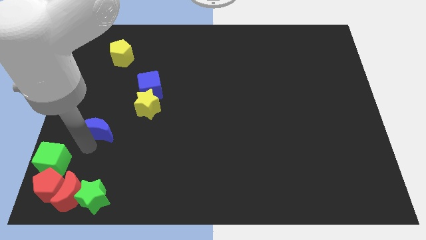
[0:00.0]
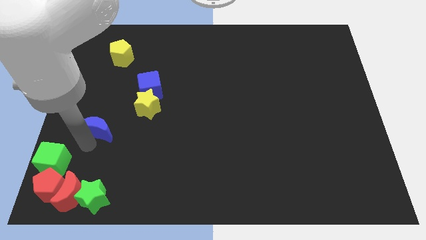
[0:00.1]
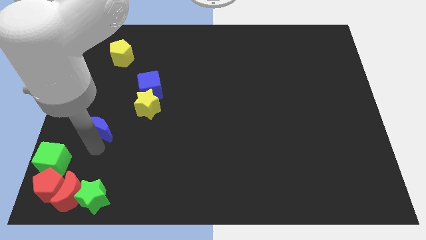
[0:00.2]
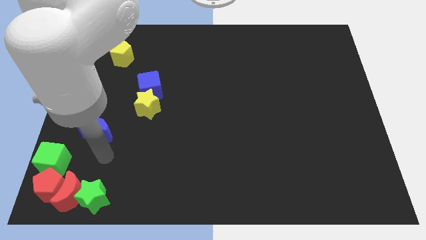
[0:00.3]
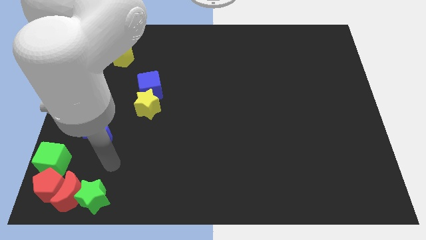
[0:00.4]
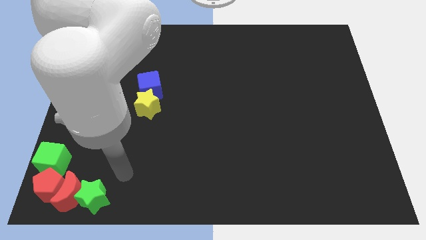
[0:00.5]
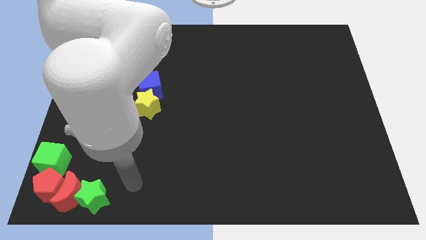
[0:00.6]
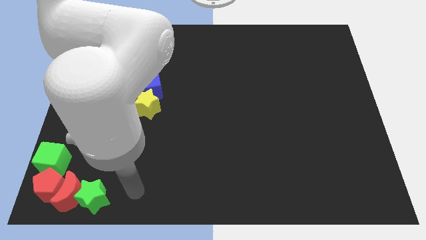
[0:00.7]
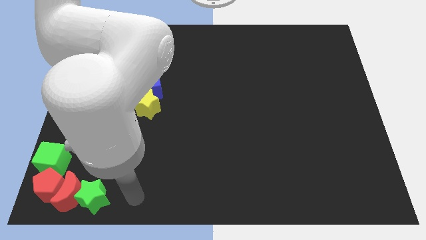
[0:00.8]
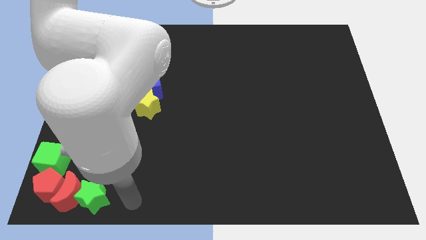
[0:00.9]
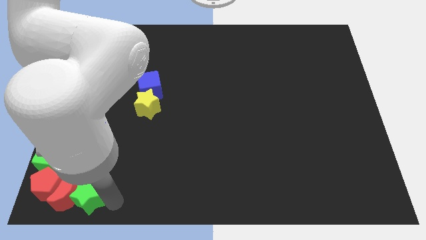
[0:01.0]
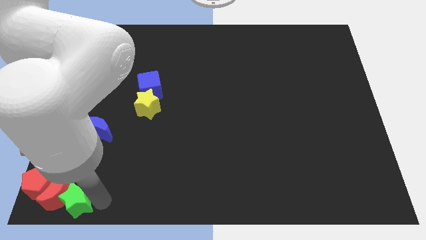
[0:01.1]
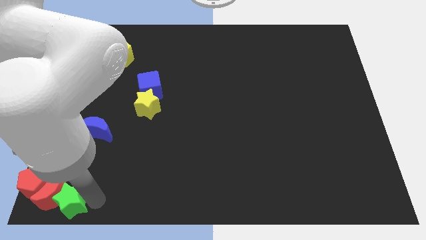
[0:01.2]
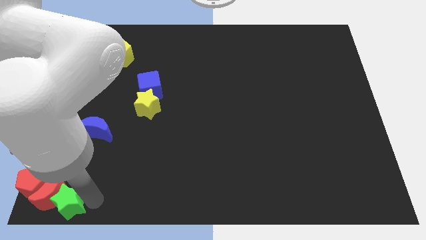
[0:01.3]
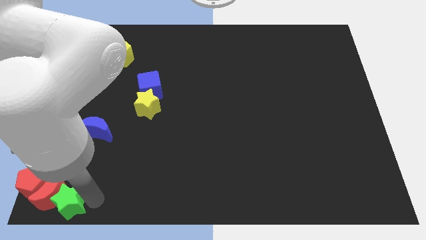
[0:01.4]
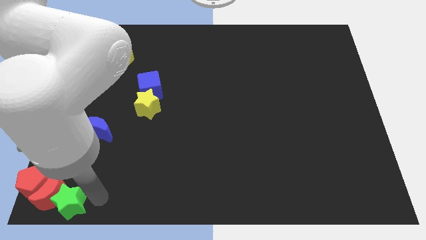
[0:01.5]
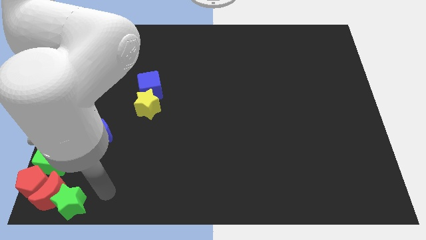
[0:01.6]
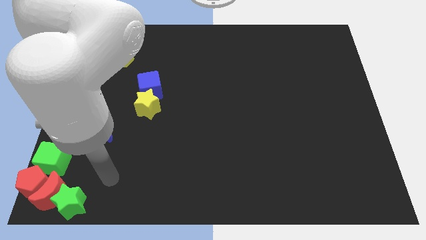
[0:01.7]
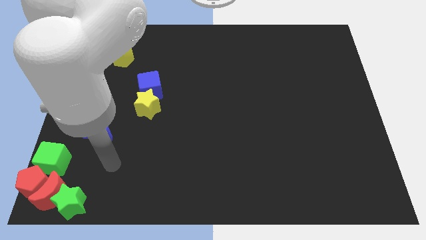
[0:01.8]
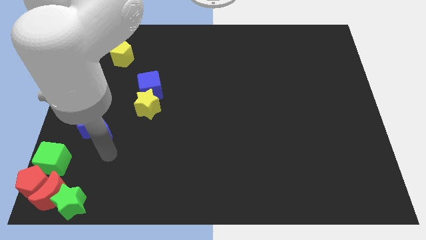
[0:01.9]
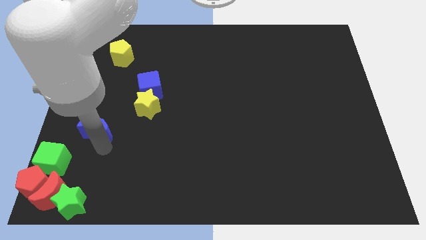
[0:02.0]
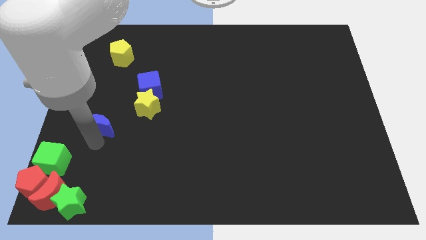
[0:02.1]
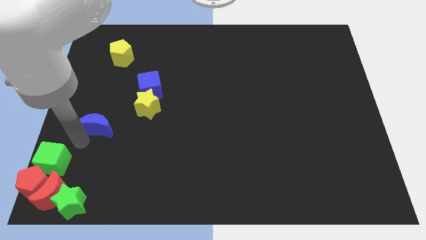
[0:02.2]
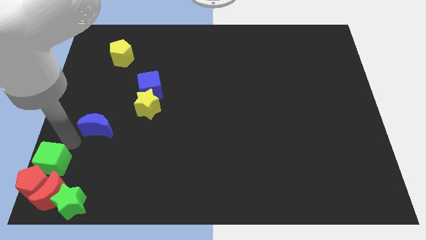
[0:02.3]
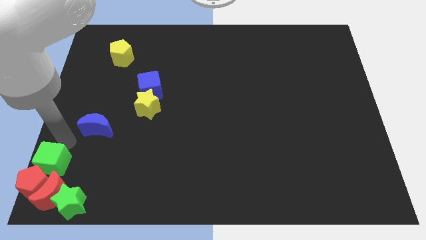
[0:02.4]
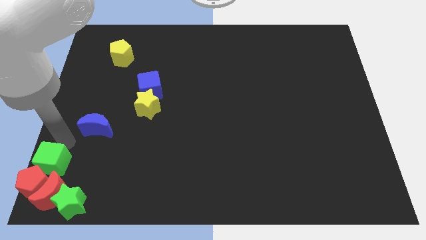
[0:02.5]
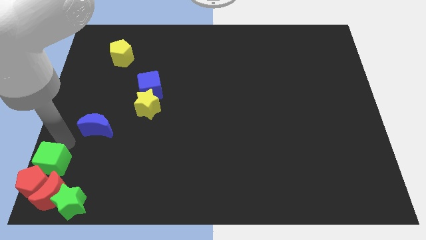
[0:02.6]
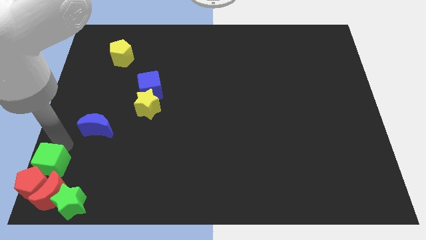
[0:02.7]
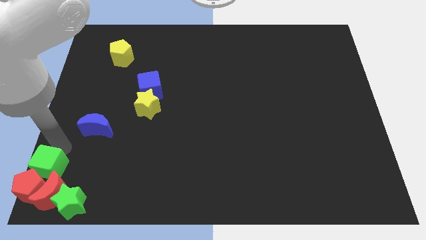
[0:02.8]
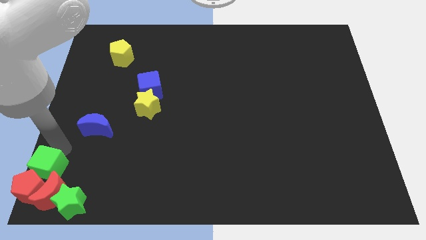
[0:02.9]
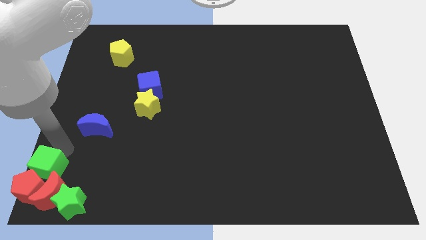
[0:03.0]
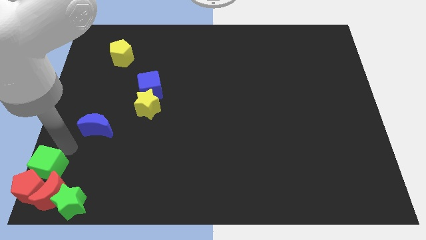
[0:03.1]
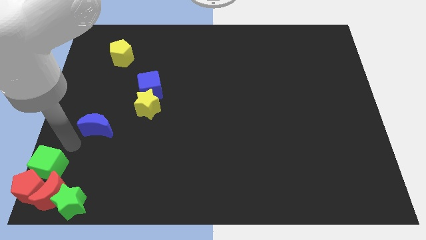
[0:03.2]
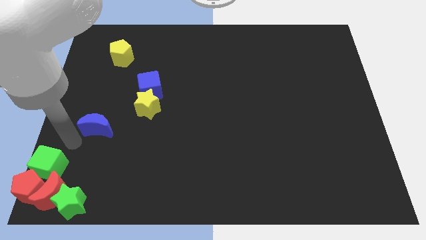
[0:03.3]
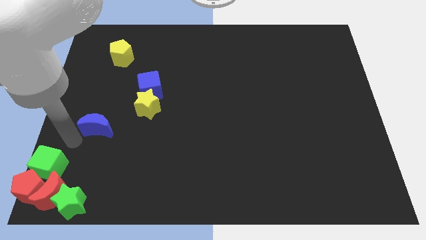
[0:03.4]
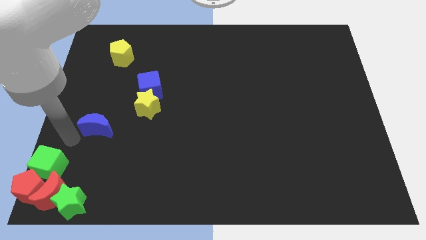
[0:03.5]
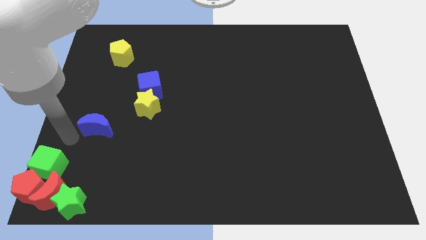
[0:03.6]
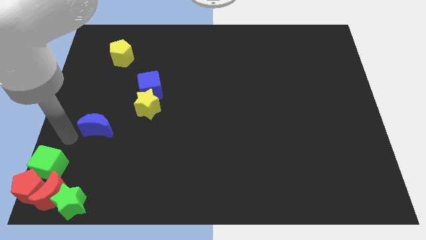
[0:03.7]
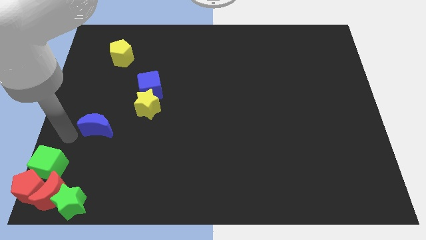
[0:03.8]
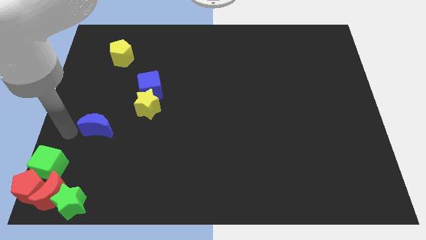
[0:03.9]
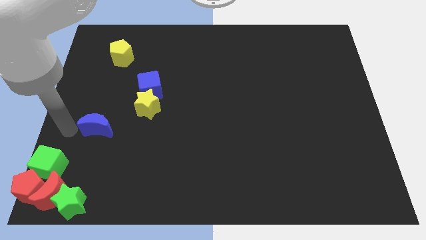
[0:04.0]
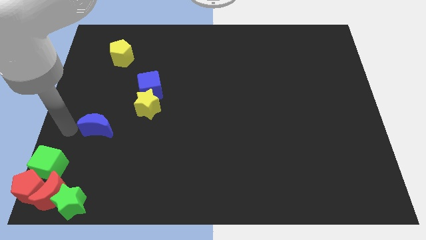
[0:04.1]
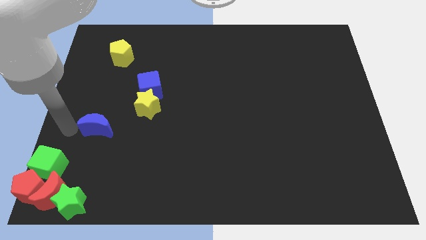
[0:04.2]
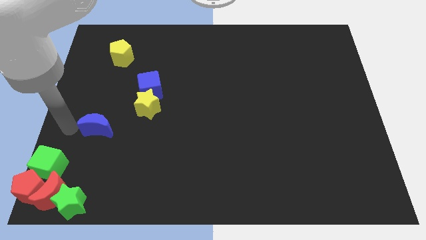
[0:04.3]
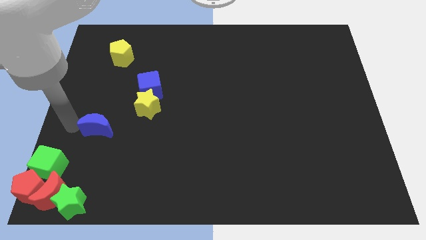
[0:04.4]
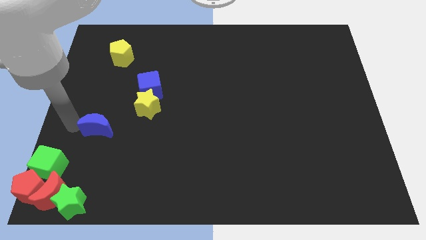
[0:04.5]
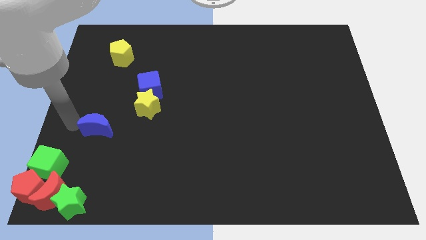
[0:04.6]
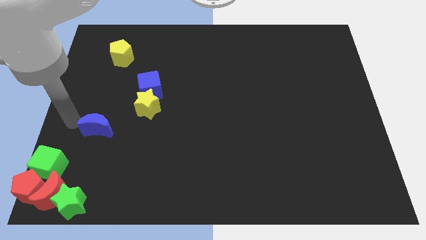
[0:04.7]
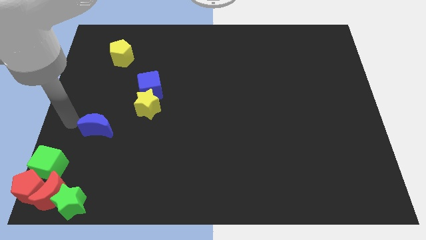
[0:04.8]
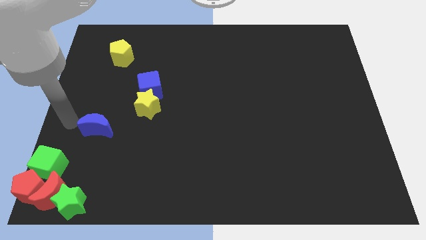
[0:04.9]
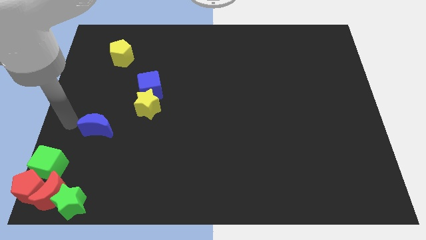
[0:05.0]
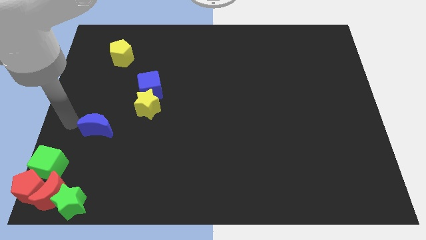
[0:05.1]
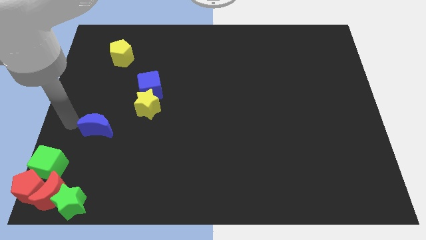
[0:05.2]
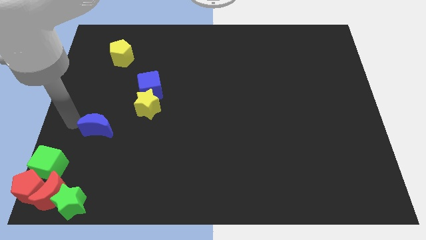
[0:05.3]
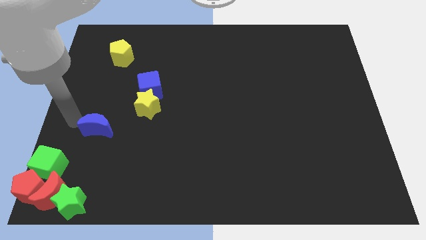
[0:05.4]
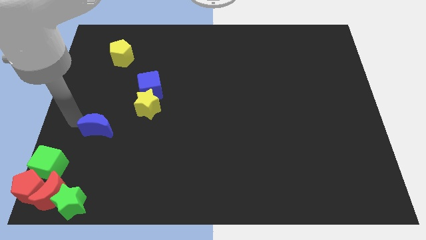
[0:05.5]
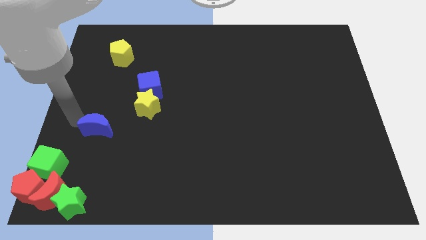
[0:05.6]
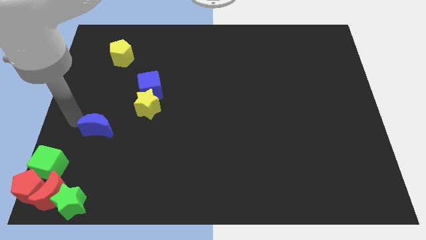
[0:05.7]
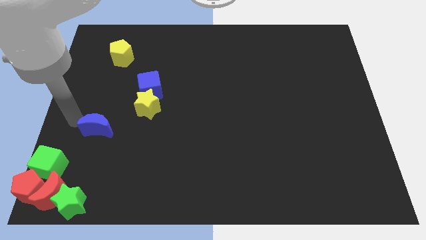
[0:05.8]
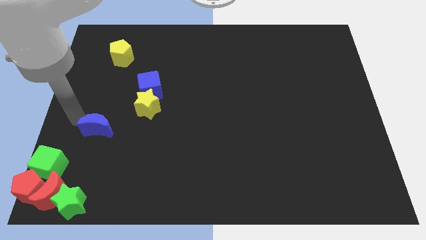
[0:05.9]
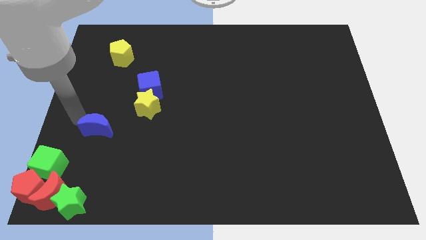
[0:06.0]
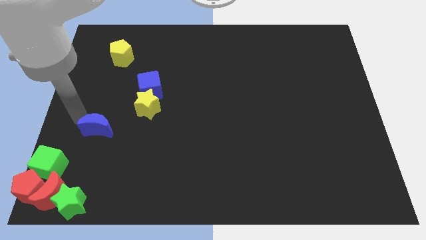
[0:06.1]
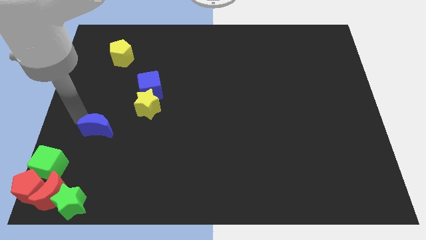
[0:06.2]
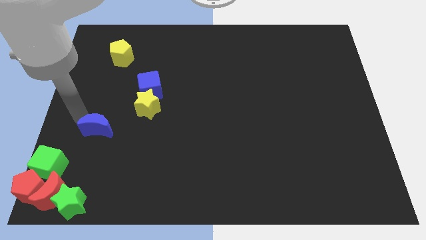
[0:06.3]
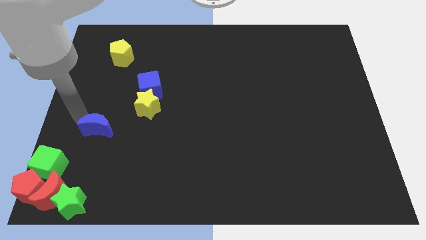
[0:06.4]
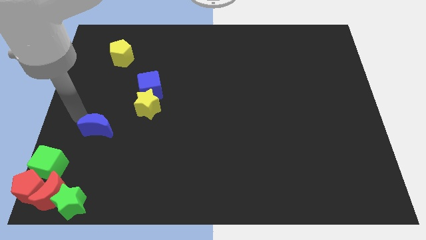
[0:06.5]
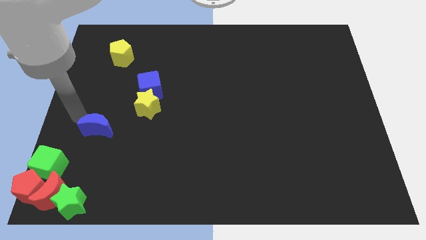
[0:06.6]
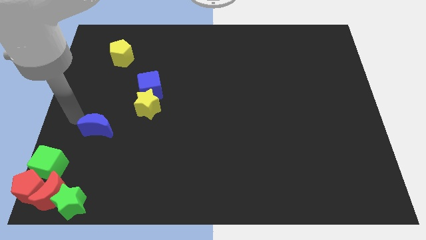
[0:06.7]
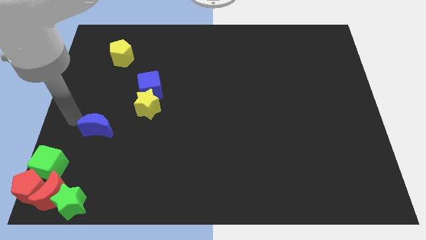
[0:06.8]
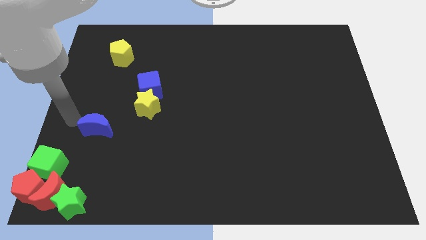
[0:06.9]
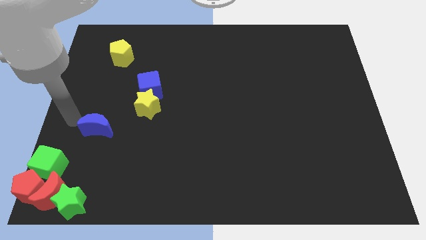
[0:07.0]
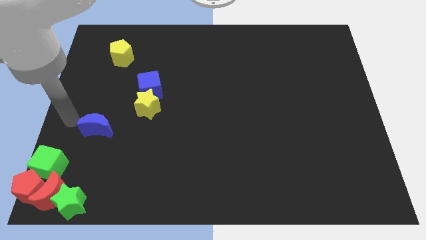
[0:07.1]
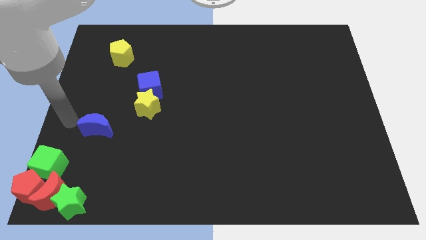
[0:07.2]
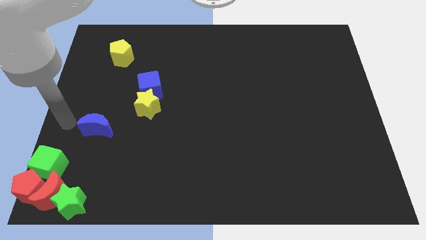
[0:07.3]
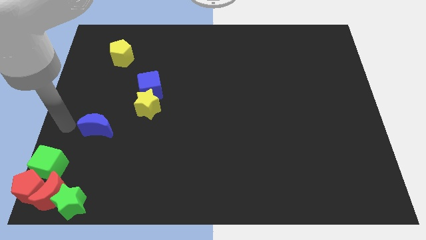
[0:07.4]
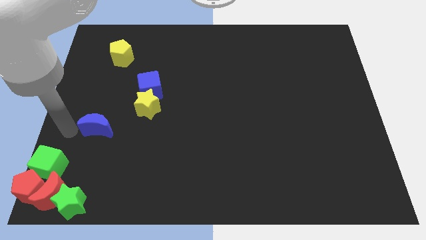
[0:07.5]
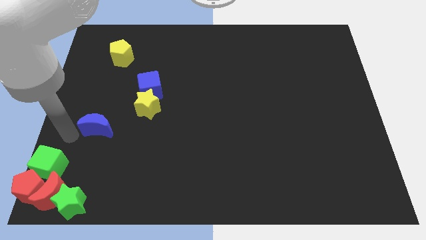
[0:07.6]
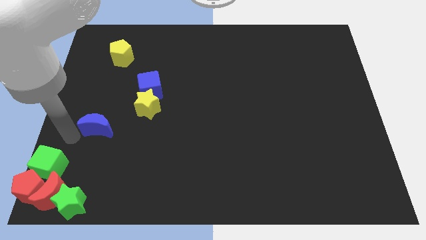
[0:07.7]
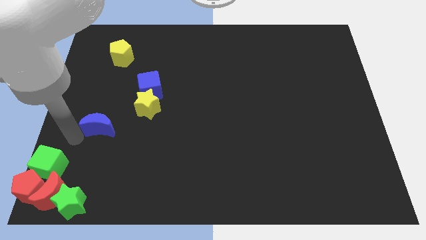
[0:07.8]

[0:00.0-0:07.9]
push the group of blocks towards the bottom left corner of the board

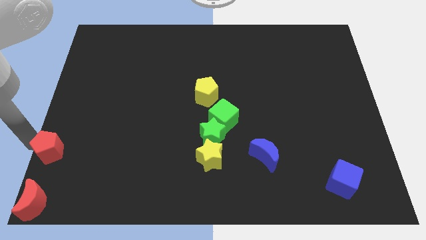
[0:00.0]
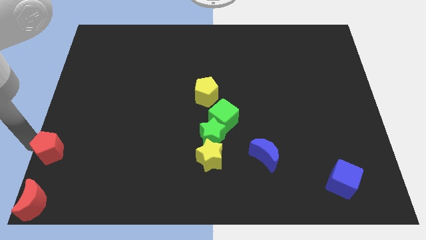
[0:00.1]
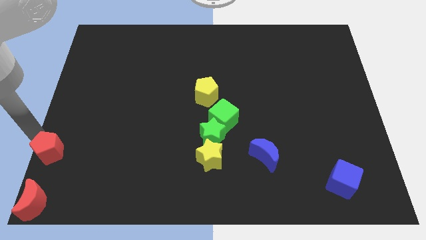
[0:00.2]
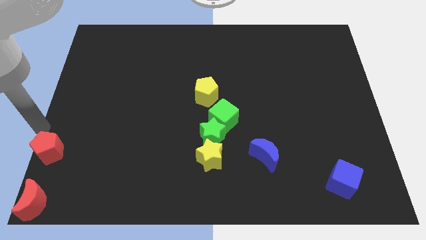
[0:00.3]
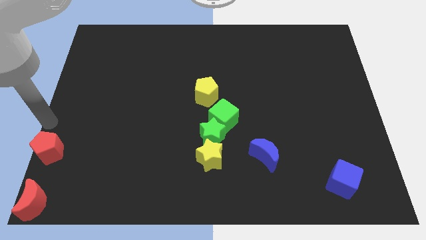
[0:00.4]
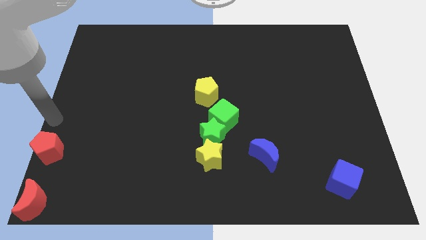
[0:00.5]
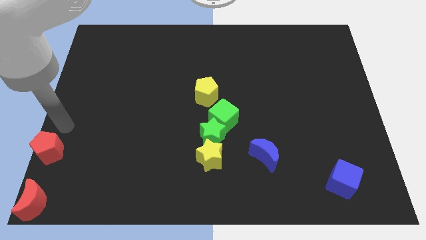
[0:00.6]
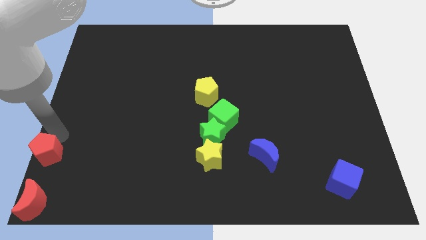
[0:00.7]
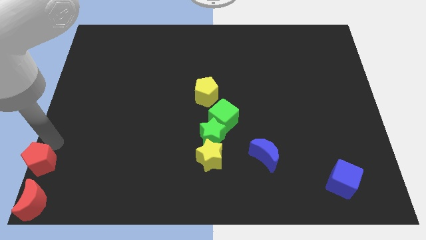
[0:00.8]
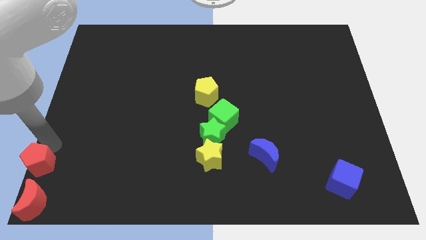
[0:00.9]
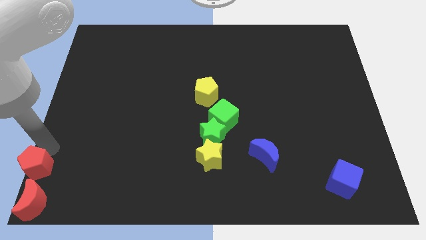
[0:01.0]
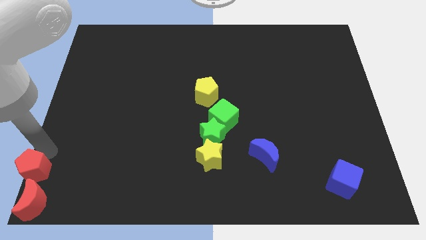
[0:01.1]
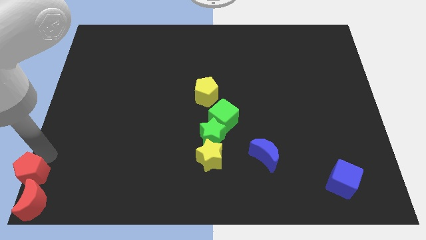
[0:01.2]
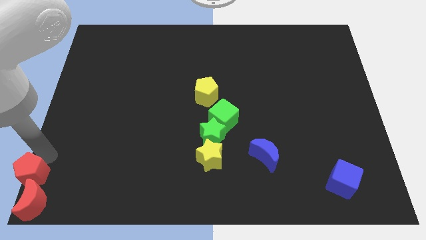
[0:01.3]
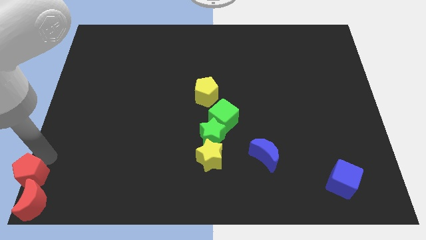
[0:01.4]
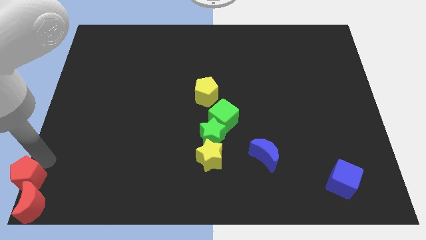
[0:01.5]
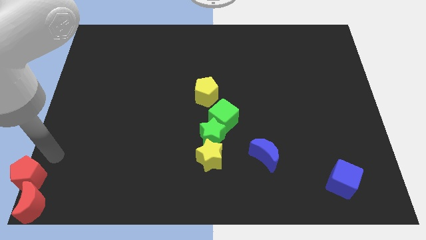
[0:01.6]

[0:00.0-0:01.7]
push the red pentagon into the red crescent
